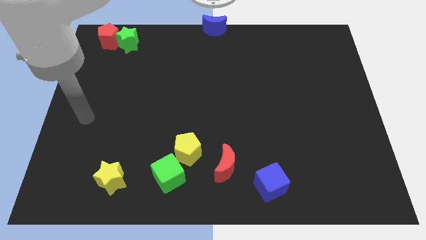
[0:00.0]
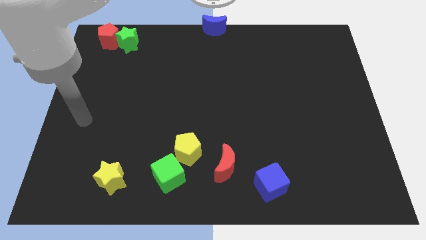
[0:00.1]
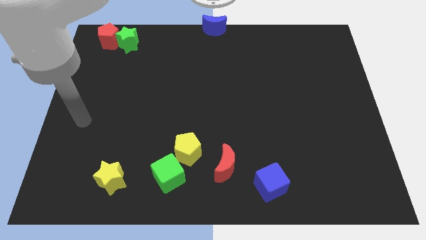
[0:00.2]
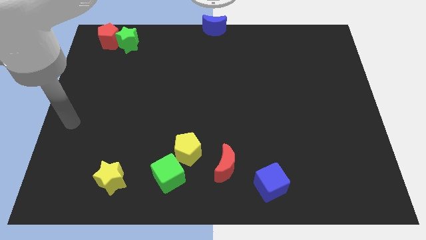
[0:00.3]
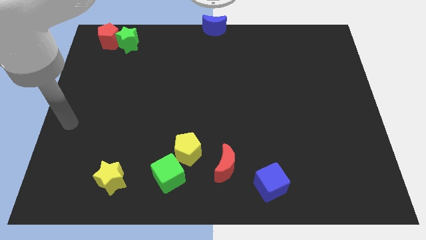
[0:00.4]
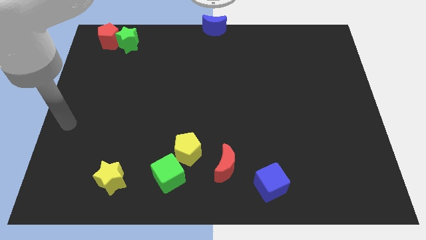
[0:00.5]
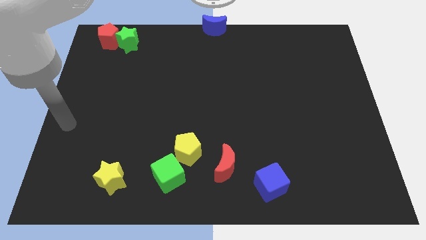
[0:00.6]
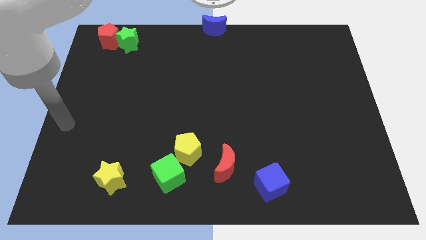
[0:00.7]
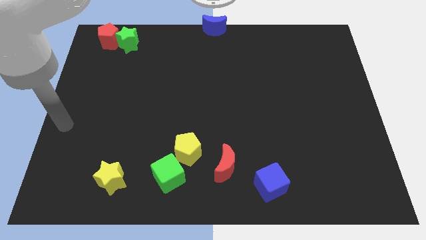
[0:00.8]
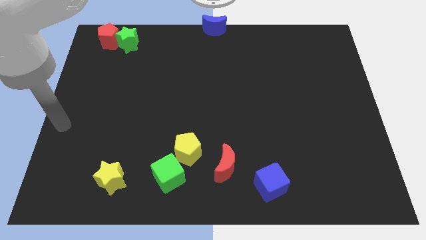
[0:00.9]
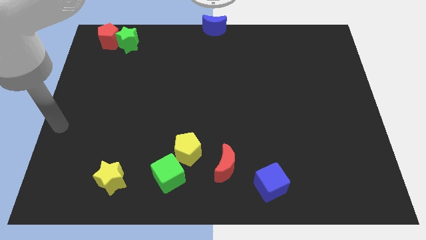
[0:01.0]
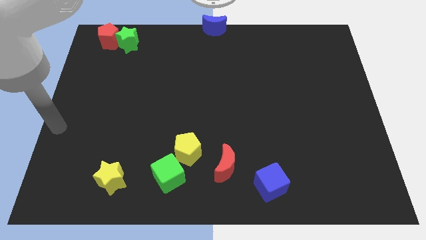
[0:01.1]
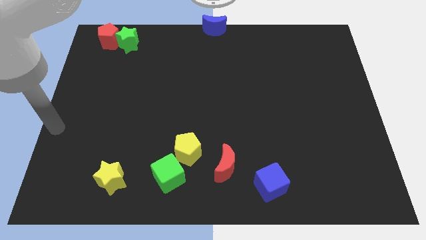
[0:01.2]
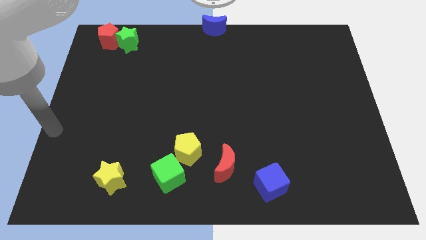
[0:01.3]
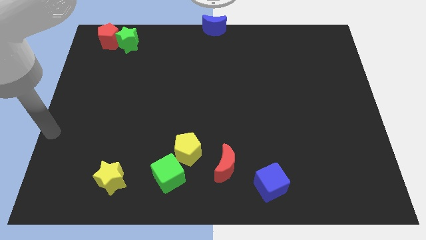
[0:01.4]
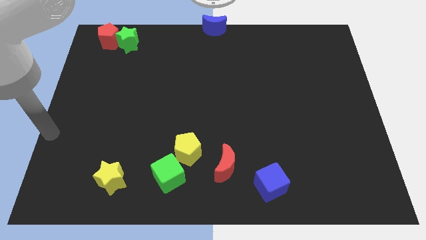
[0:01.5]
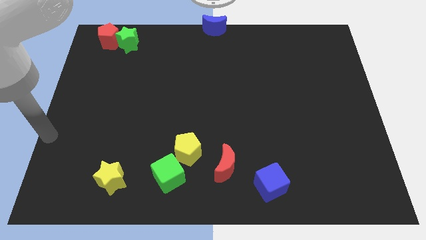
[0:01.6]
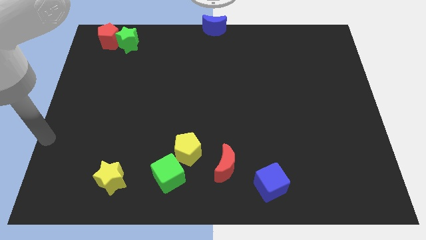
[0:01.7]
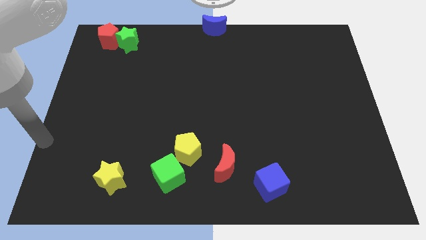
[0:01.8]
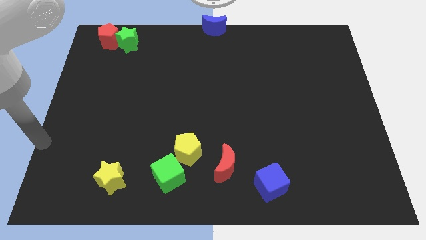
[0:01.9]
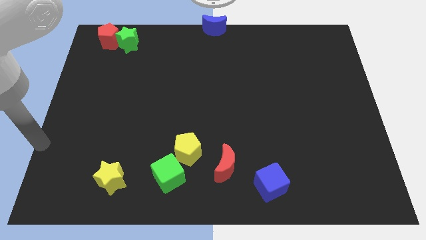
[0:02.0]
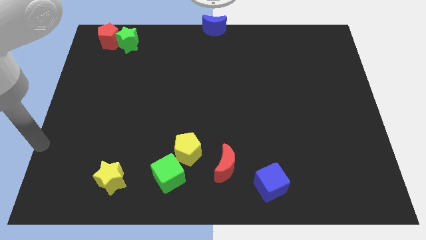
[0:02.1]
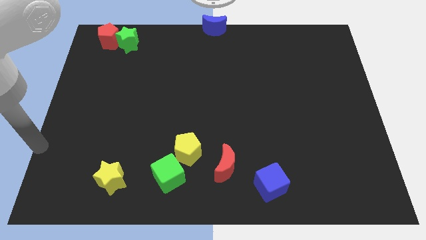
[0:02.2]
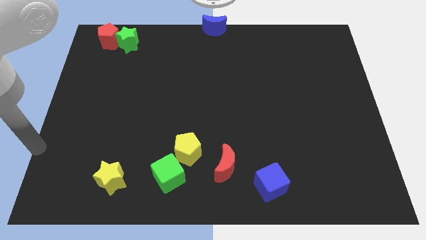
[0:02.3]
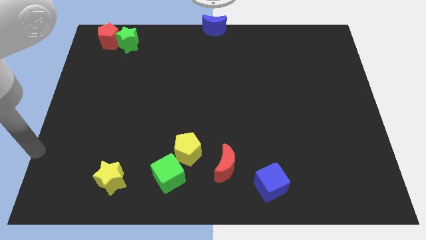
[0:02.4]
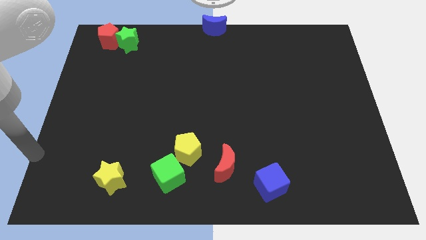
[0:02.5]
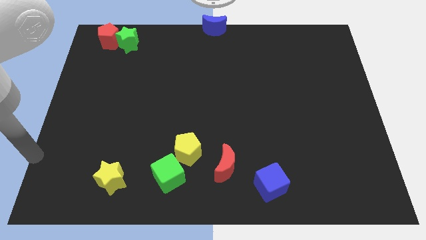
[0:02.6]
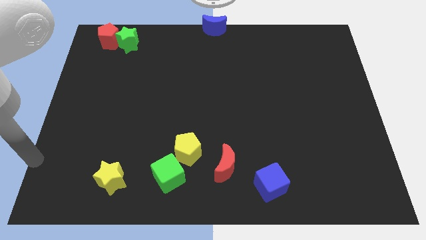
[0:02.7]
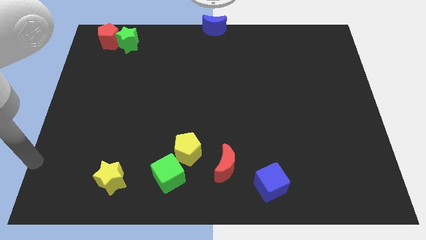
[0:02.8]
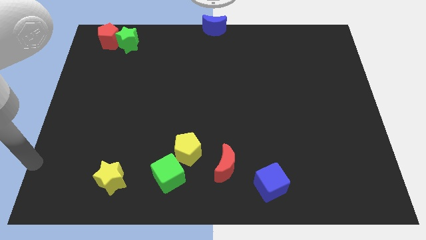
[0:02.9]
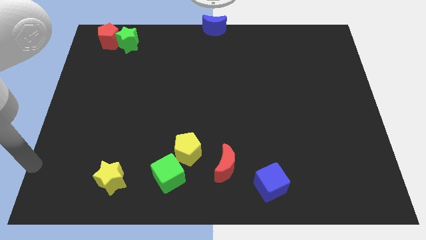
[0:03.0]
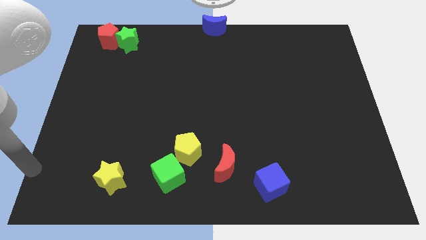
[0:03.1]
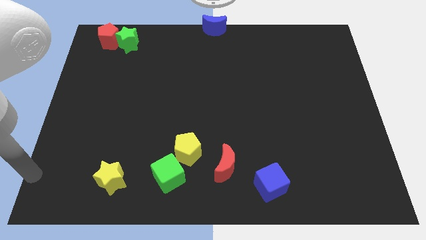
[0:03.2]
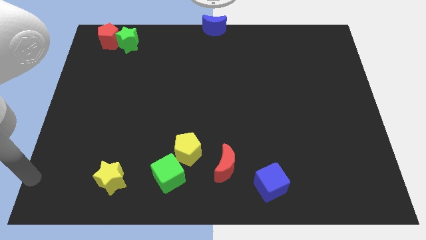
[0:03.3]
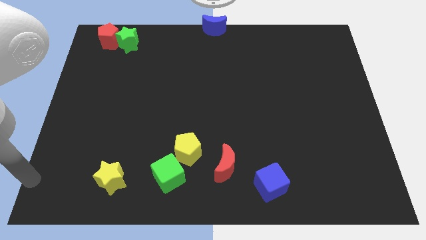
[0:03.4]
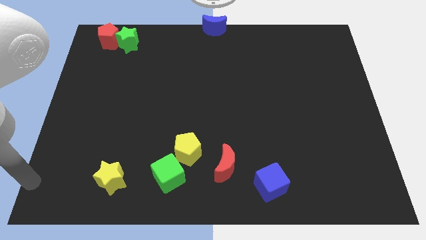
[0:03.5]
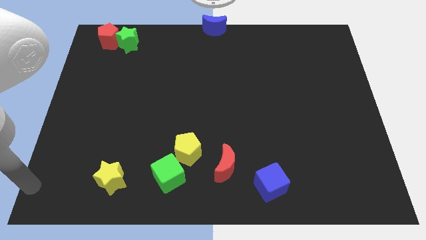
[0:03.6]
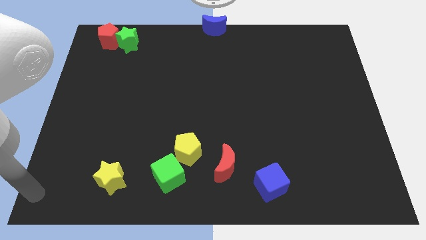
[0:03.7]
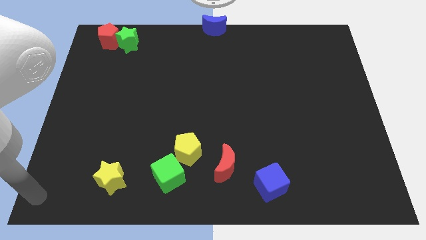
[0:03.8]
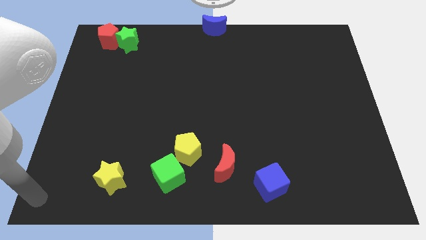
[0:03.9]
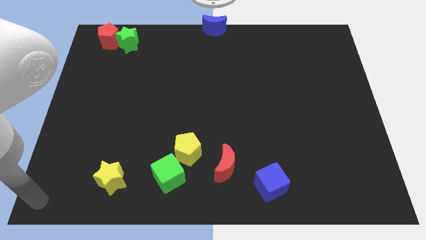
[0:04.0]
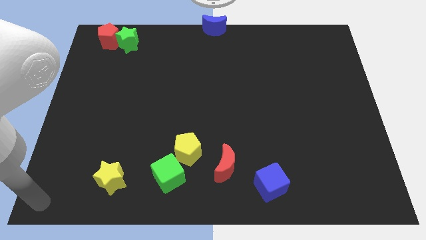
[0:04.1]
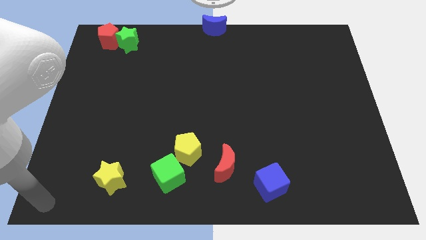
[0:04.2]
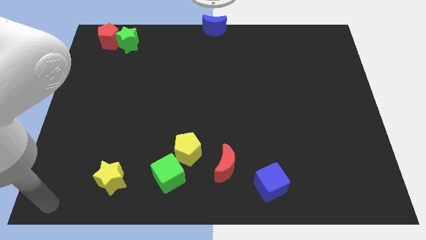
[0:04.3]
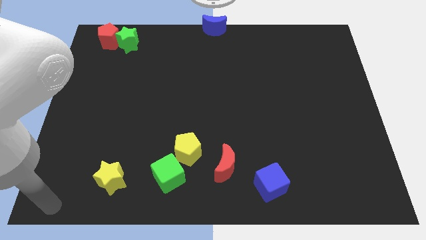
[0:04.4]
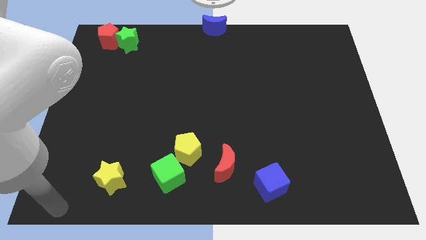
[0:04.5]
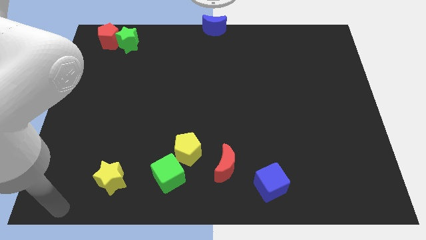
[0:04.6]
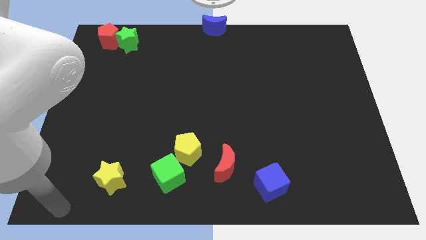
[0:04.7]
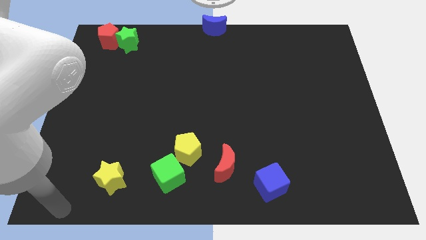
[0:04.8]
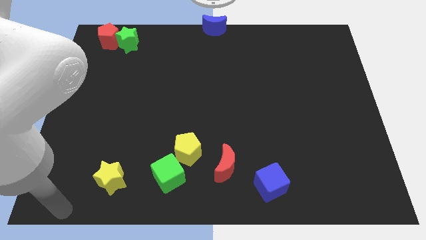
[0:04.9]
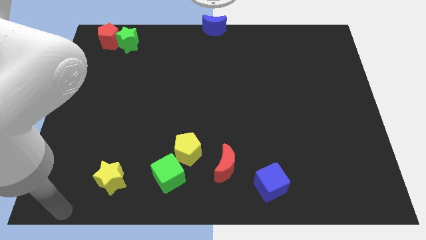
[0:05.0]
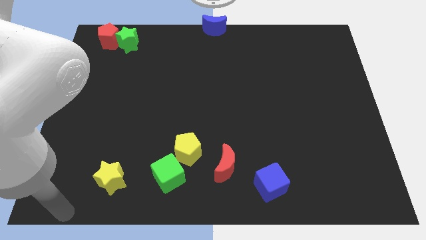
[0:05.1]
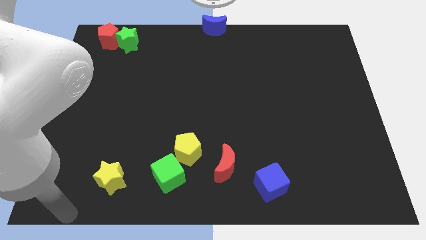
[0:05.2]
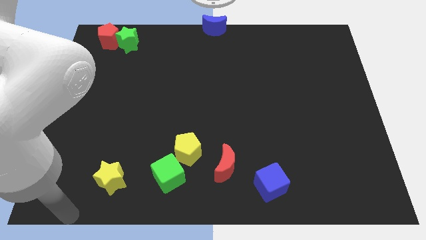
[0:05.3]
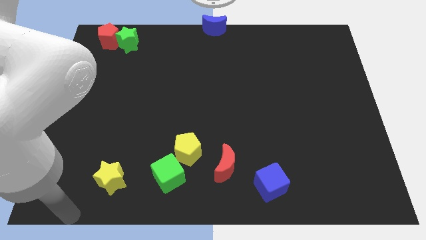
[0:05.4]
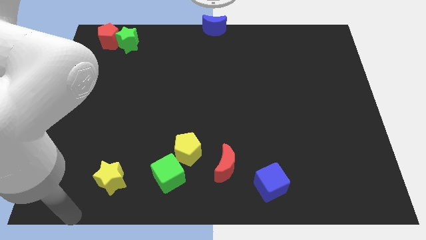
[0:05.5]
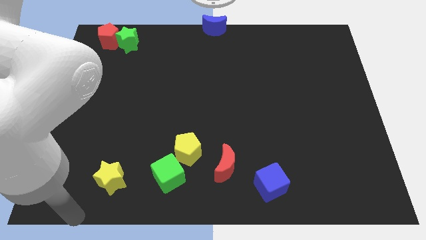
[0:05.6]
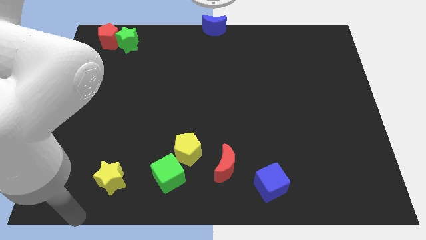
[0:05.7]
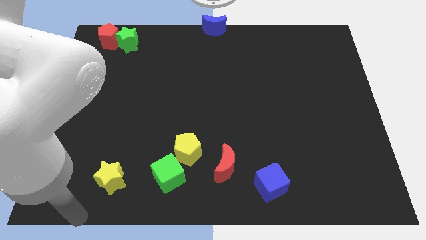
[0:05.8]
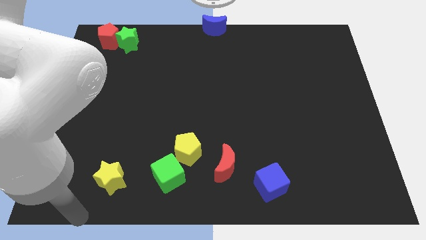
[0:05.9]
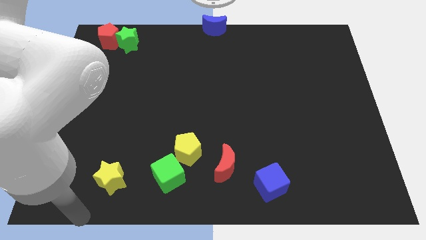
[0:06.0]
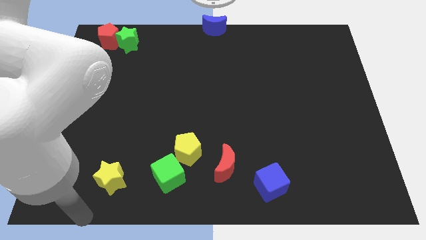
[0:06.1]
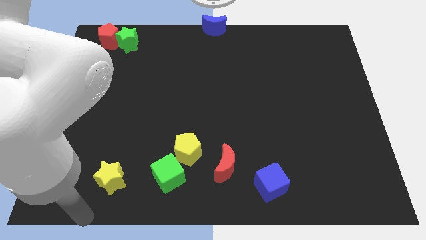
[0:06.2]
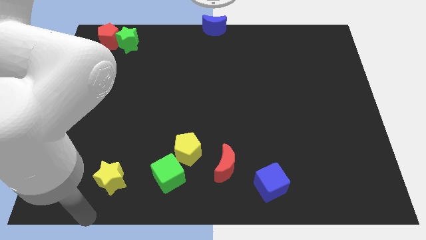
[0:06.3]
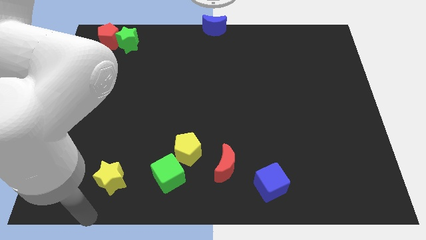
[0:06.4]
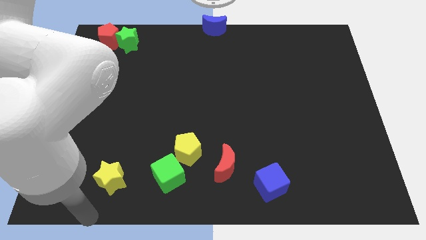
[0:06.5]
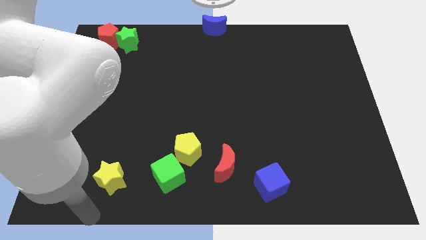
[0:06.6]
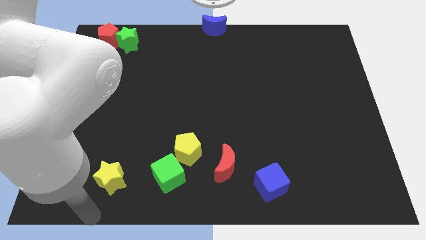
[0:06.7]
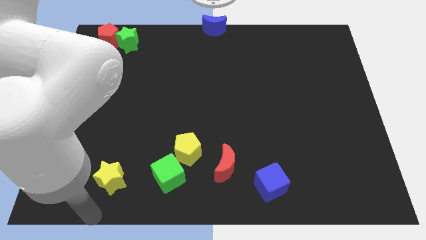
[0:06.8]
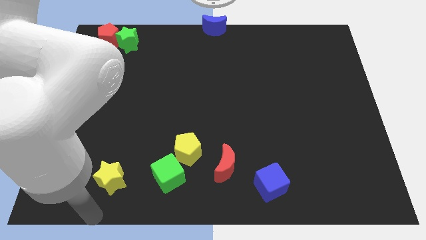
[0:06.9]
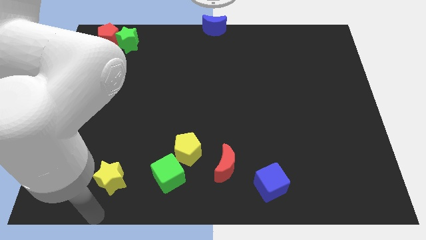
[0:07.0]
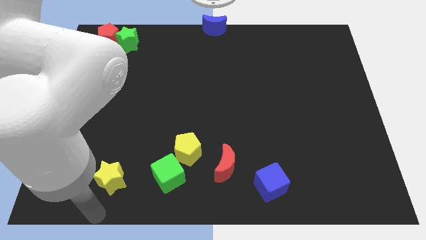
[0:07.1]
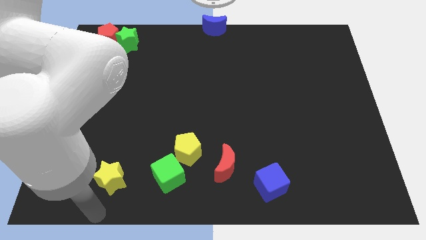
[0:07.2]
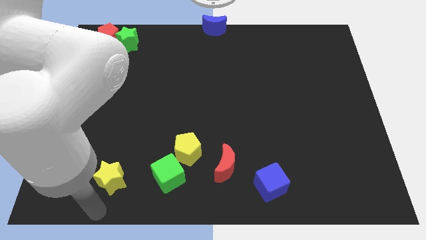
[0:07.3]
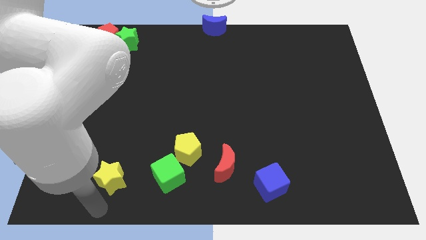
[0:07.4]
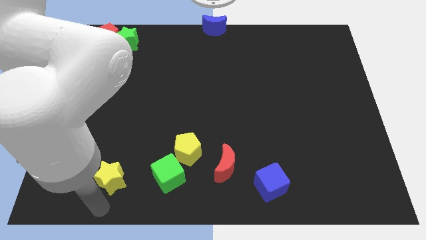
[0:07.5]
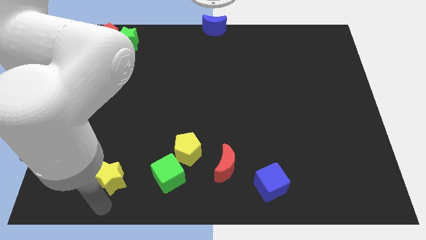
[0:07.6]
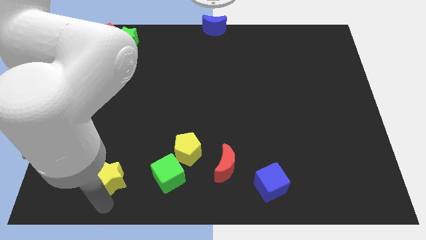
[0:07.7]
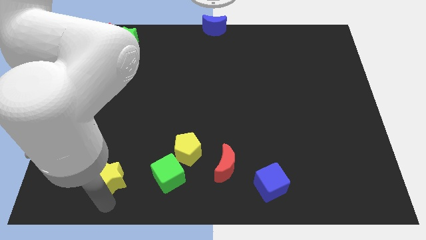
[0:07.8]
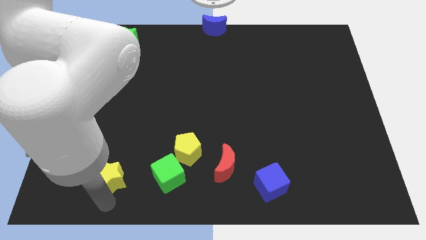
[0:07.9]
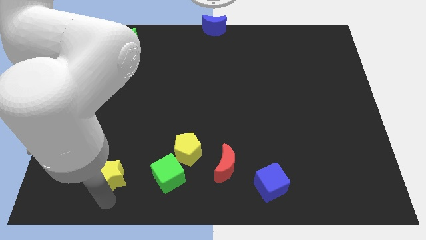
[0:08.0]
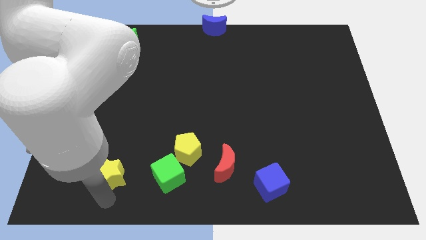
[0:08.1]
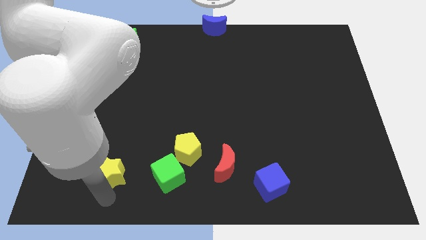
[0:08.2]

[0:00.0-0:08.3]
touch the yellow star

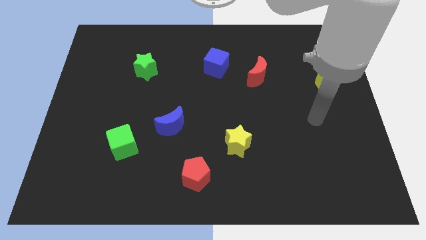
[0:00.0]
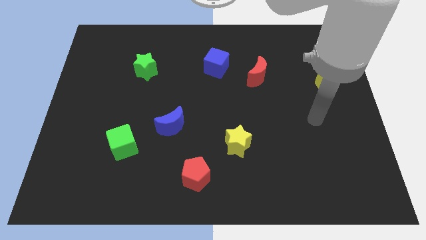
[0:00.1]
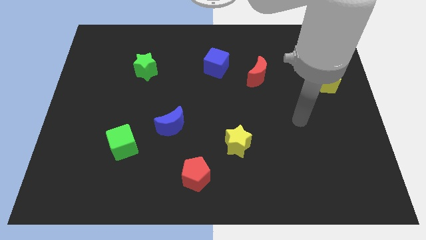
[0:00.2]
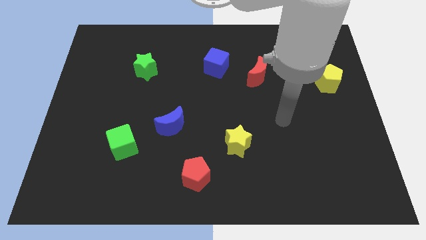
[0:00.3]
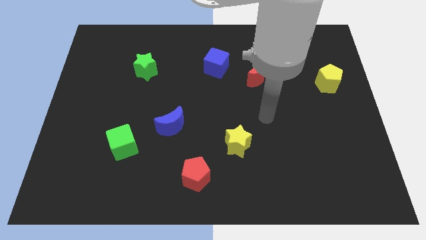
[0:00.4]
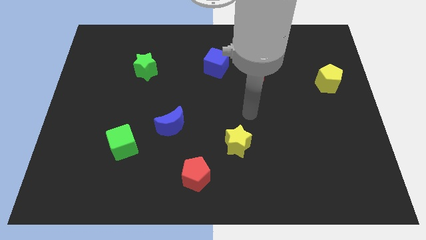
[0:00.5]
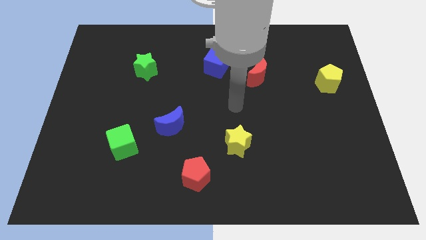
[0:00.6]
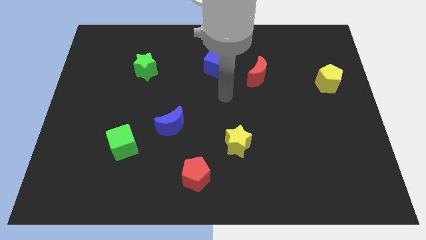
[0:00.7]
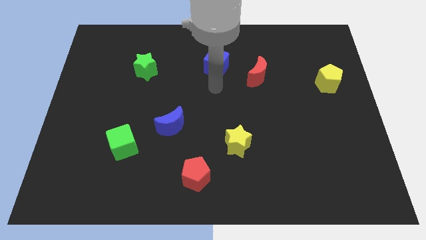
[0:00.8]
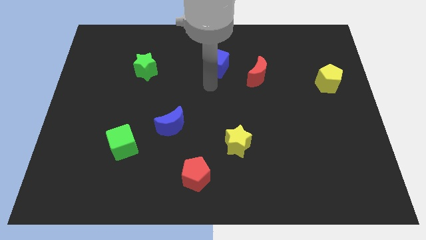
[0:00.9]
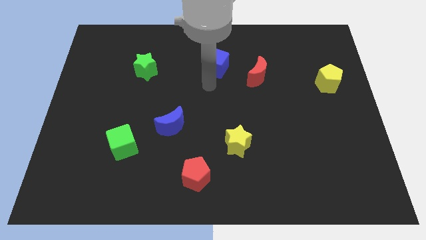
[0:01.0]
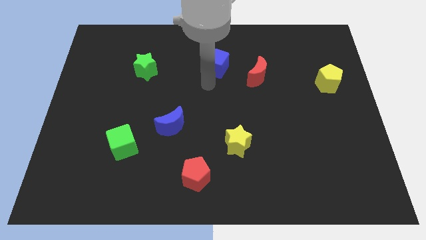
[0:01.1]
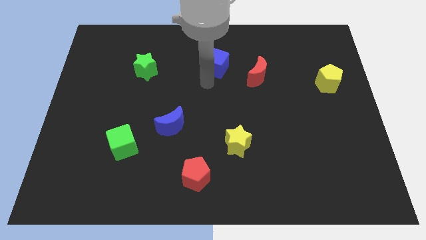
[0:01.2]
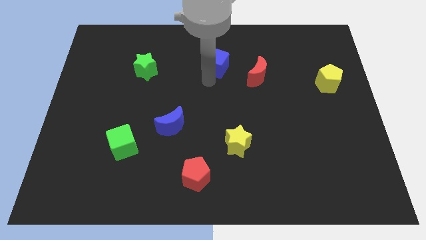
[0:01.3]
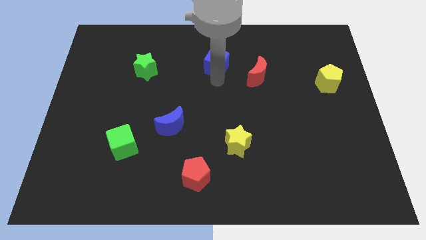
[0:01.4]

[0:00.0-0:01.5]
point your hand bottom side of the blue cube
